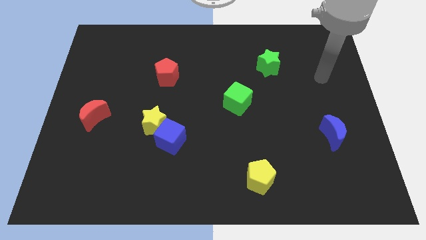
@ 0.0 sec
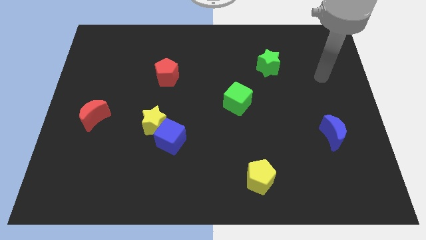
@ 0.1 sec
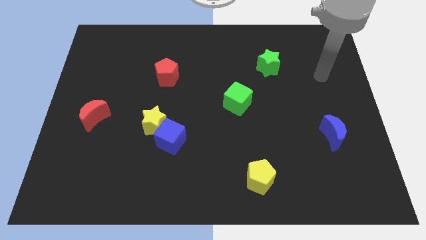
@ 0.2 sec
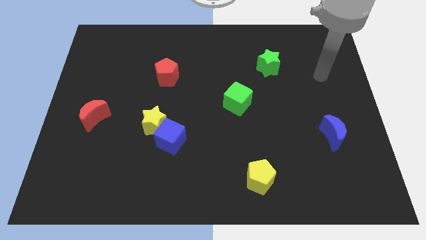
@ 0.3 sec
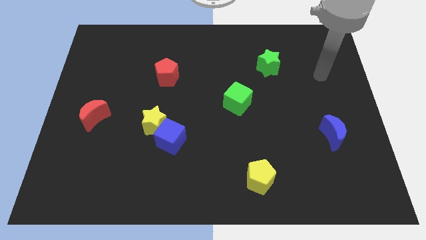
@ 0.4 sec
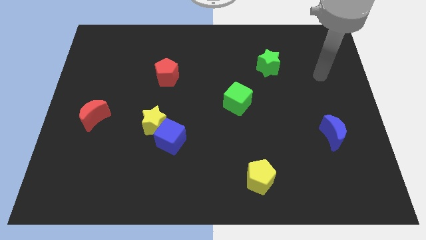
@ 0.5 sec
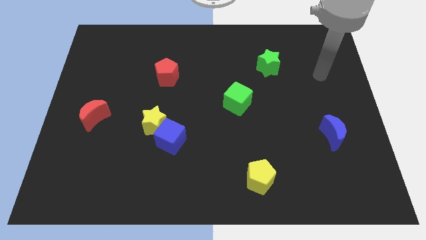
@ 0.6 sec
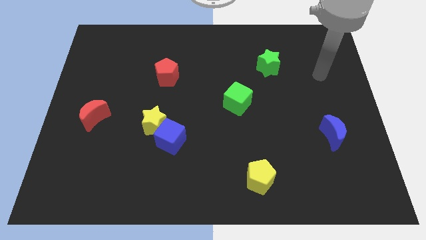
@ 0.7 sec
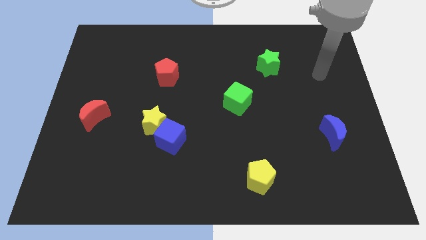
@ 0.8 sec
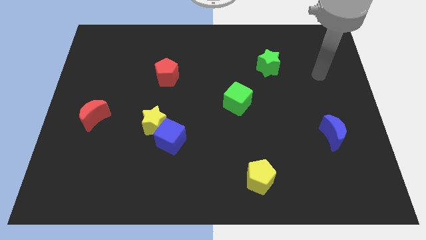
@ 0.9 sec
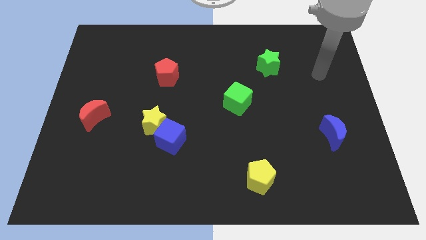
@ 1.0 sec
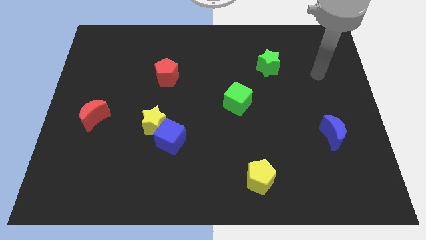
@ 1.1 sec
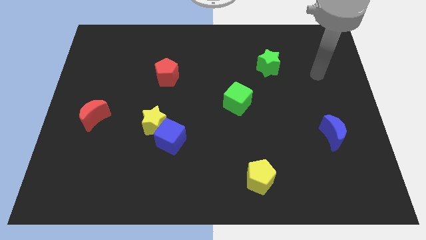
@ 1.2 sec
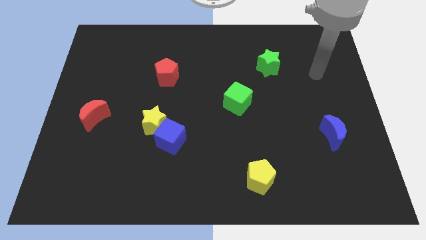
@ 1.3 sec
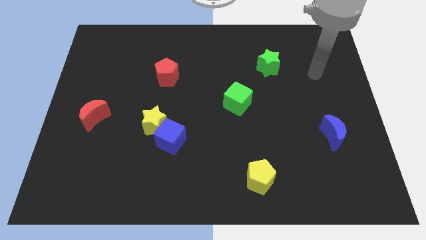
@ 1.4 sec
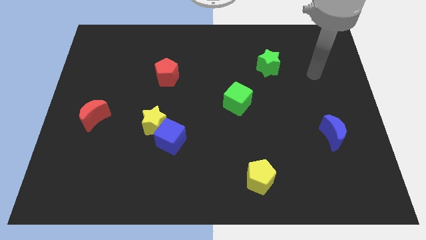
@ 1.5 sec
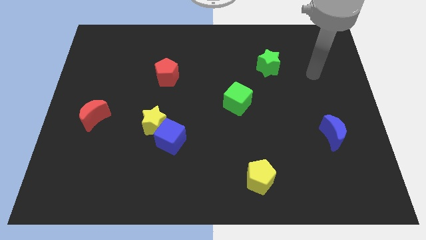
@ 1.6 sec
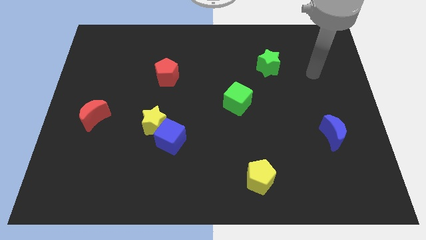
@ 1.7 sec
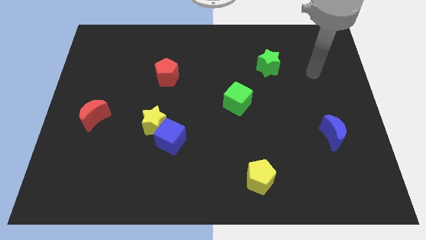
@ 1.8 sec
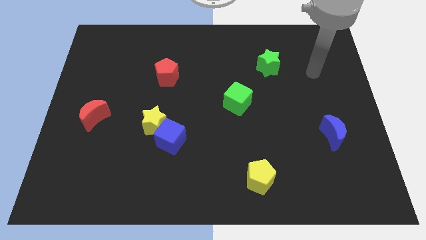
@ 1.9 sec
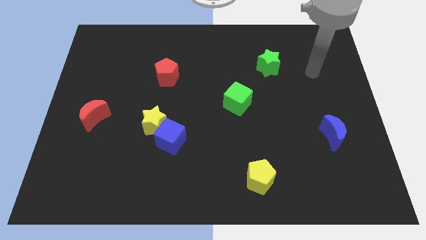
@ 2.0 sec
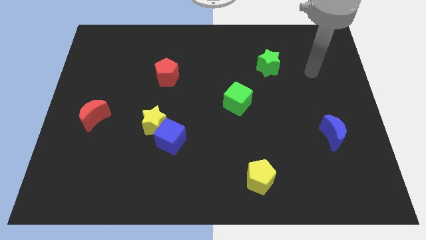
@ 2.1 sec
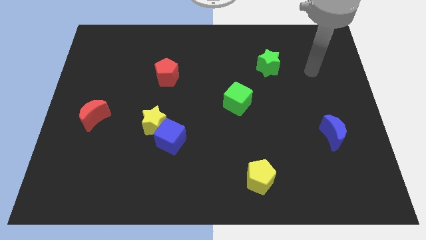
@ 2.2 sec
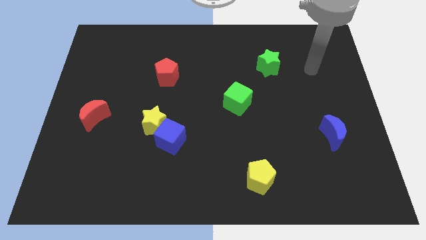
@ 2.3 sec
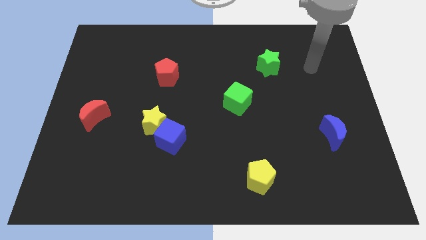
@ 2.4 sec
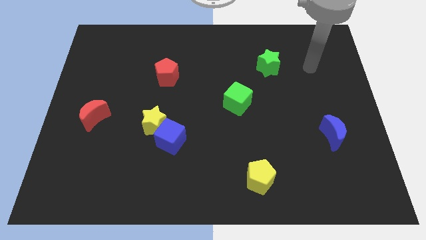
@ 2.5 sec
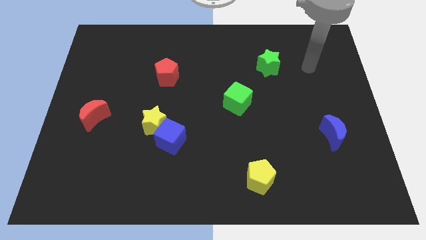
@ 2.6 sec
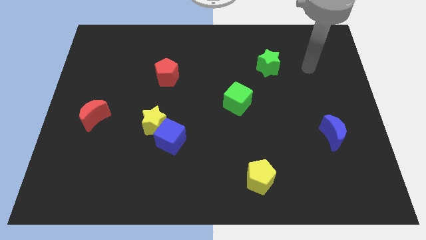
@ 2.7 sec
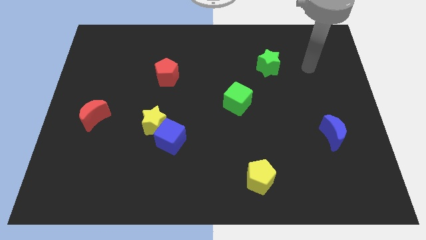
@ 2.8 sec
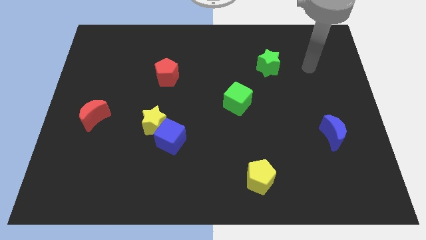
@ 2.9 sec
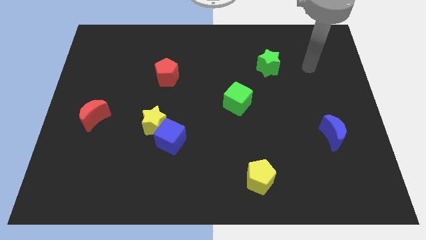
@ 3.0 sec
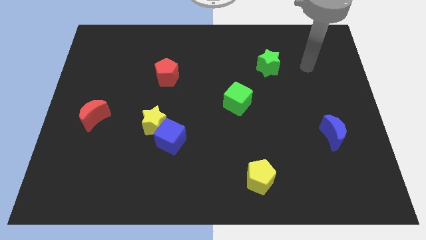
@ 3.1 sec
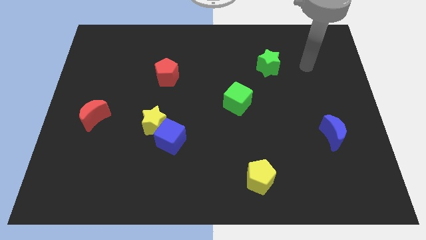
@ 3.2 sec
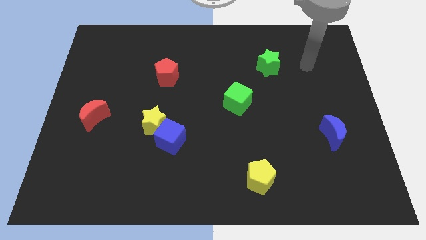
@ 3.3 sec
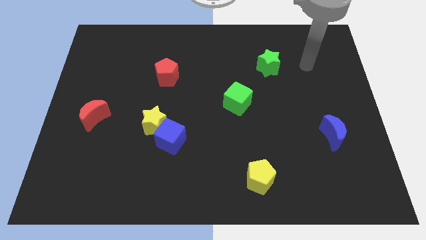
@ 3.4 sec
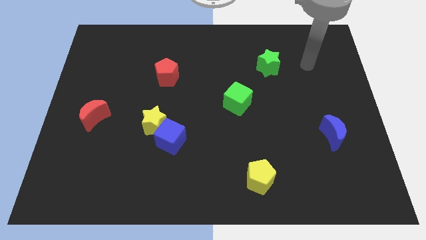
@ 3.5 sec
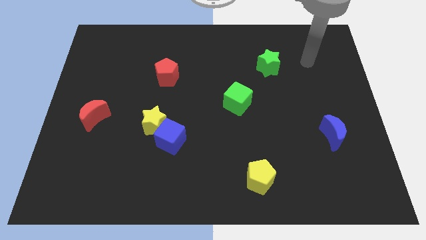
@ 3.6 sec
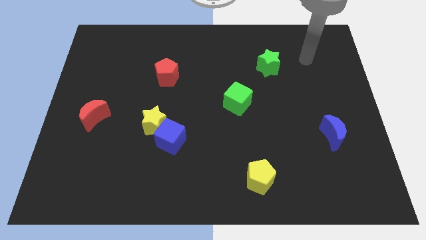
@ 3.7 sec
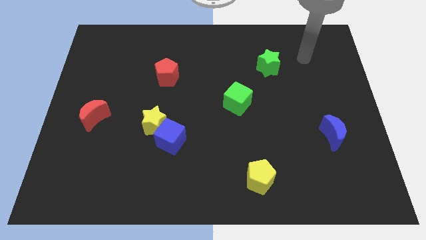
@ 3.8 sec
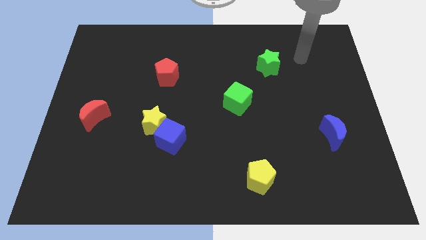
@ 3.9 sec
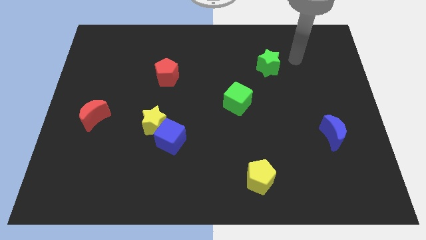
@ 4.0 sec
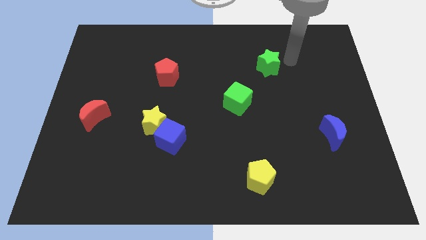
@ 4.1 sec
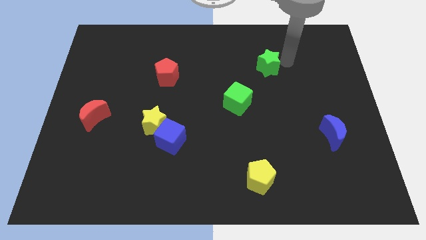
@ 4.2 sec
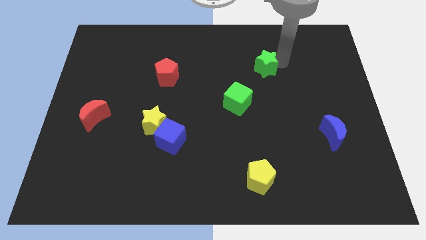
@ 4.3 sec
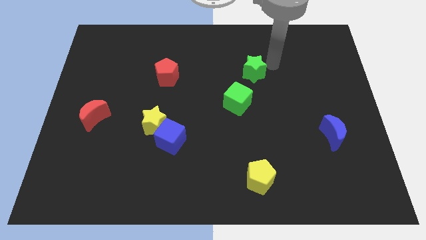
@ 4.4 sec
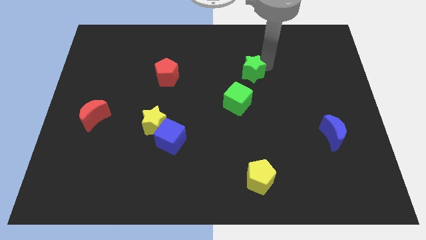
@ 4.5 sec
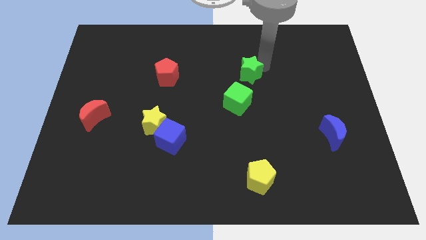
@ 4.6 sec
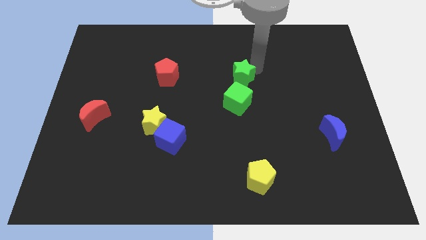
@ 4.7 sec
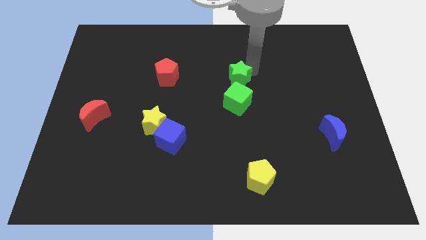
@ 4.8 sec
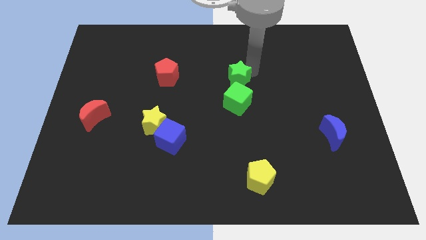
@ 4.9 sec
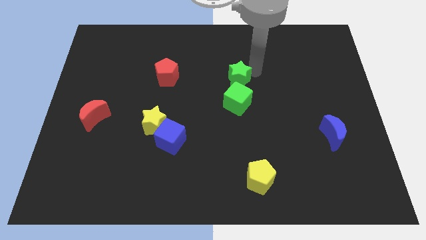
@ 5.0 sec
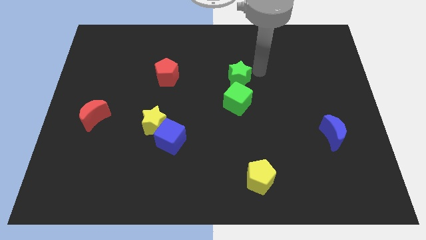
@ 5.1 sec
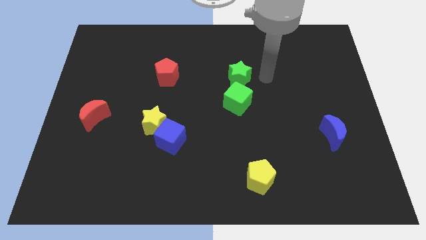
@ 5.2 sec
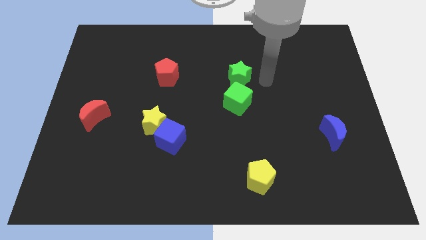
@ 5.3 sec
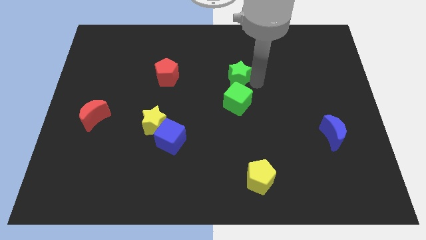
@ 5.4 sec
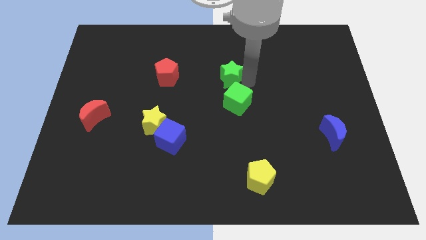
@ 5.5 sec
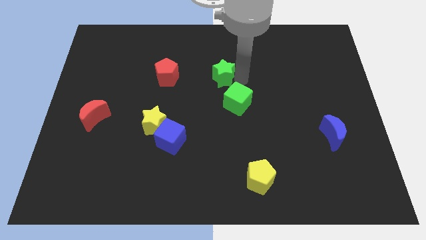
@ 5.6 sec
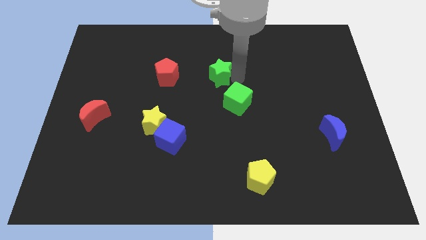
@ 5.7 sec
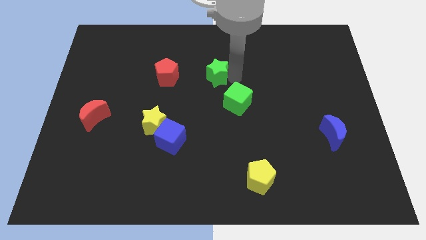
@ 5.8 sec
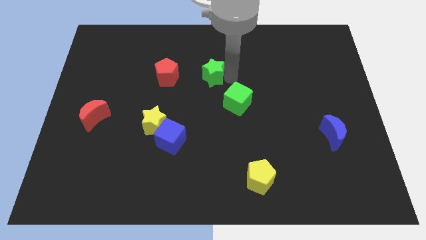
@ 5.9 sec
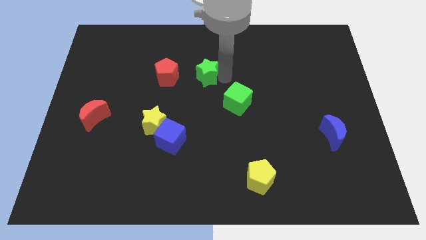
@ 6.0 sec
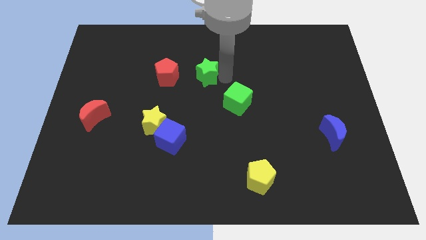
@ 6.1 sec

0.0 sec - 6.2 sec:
put the green star to the right of the red pentagon

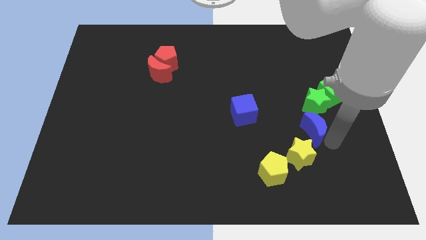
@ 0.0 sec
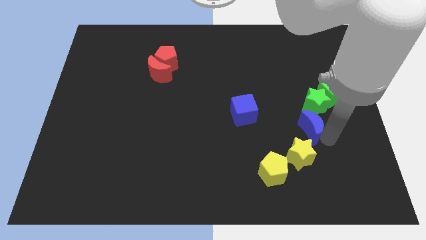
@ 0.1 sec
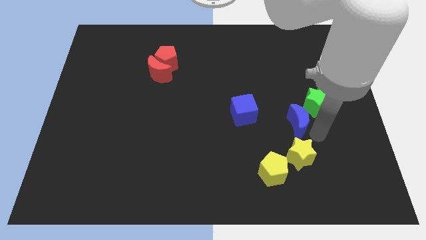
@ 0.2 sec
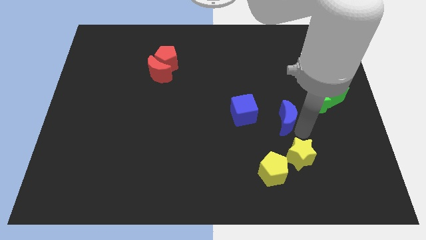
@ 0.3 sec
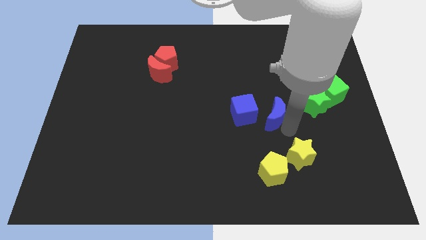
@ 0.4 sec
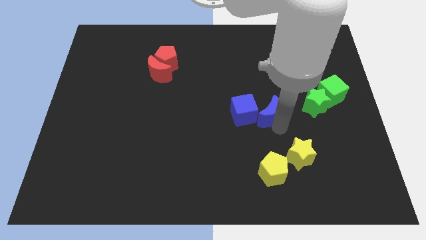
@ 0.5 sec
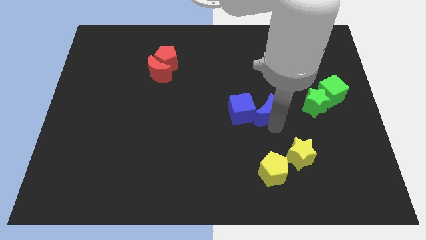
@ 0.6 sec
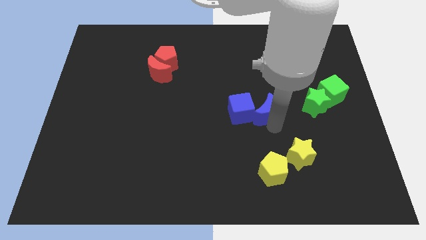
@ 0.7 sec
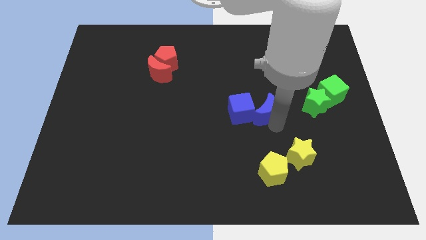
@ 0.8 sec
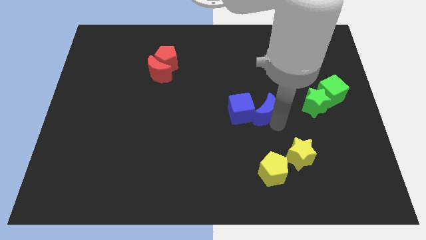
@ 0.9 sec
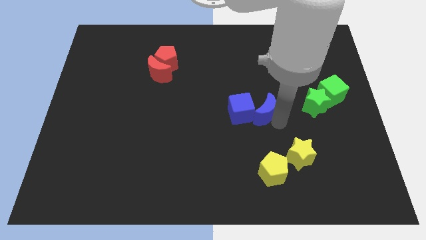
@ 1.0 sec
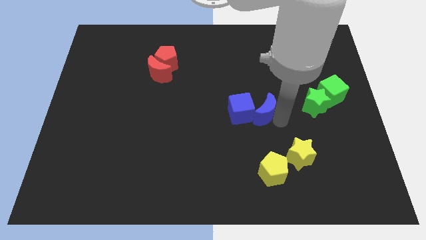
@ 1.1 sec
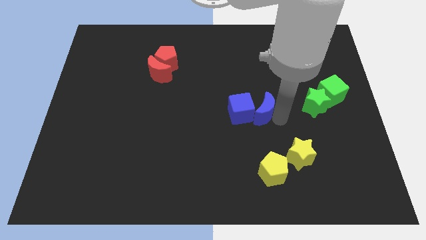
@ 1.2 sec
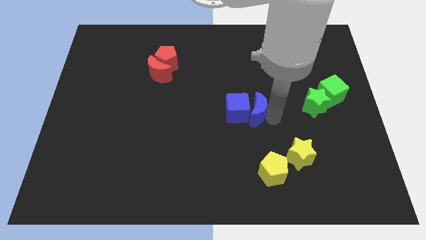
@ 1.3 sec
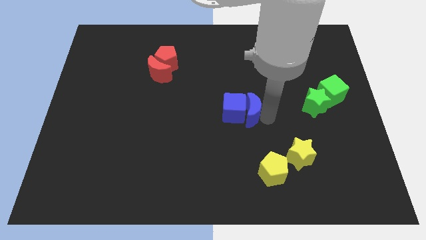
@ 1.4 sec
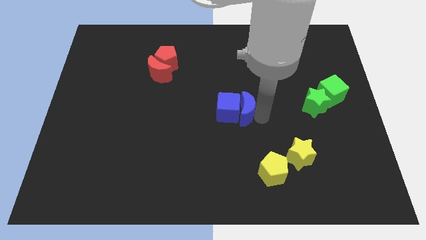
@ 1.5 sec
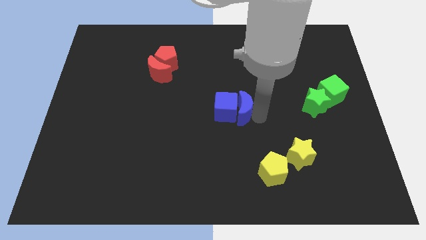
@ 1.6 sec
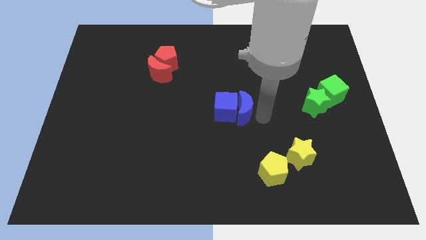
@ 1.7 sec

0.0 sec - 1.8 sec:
push the blue moon into the blue cube

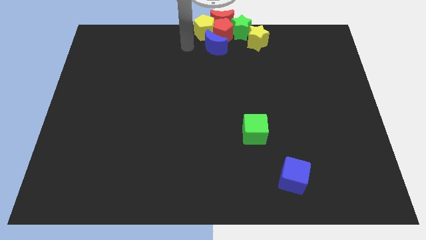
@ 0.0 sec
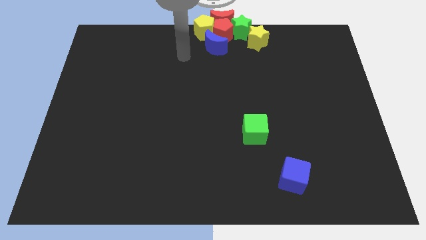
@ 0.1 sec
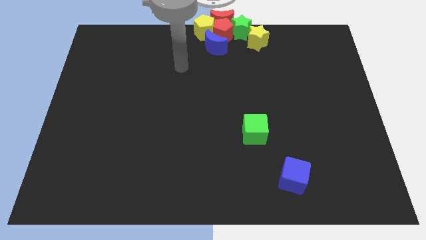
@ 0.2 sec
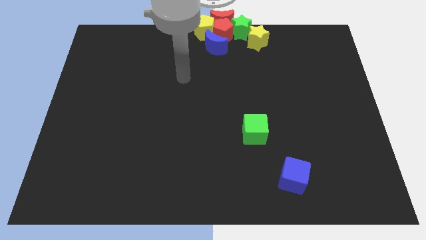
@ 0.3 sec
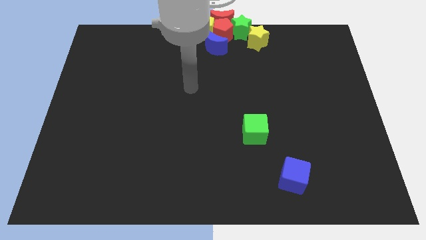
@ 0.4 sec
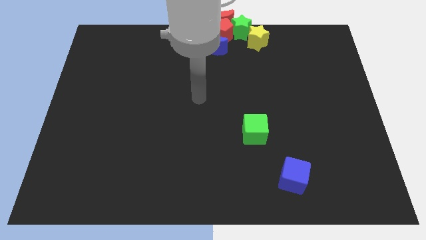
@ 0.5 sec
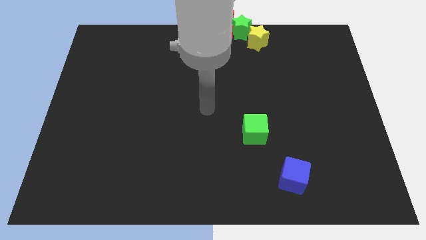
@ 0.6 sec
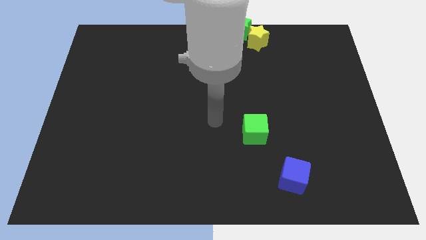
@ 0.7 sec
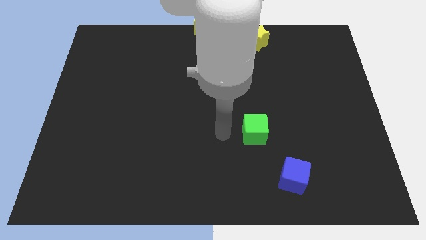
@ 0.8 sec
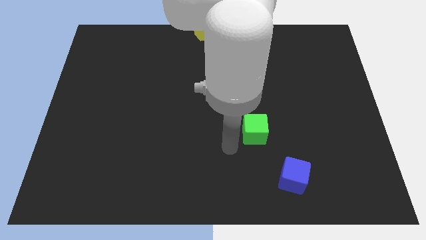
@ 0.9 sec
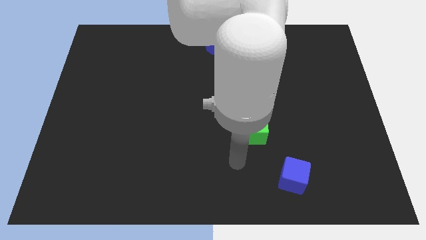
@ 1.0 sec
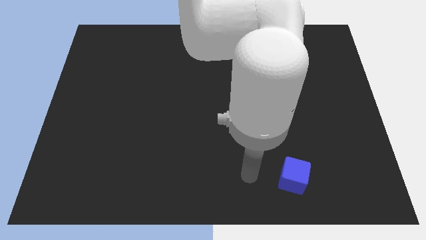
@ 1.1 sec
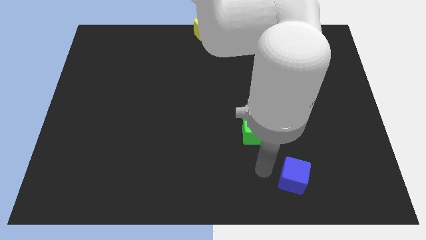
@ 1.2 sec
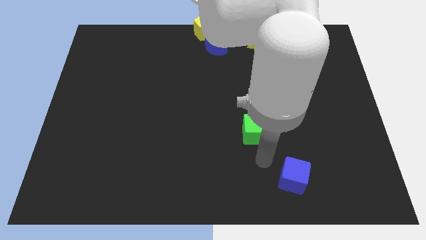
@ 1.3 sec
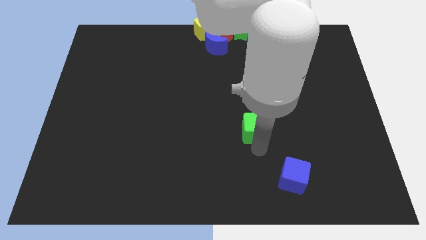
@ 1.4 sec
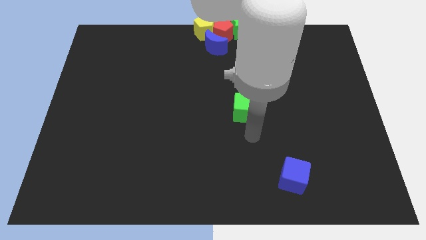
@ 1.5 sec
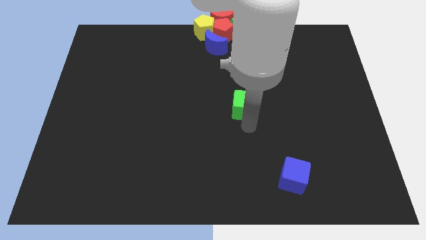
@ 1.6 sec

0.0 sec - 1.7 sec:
move your arm towards the green cube
